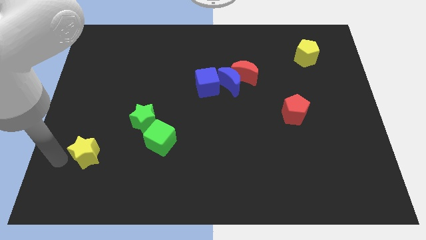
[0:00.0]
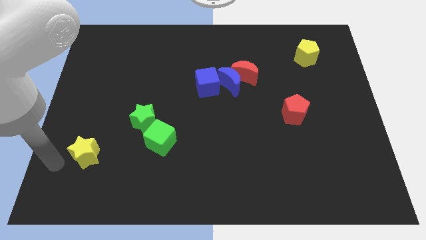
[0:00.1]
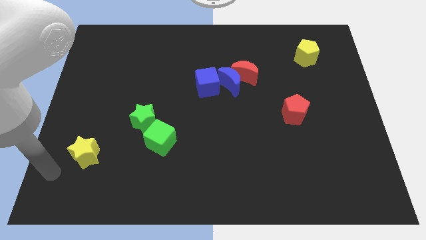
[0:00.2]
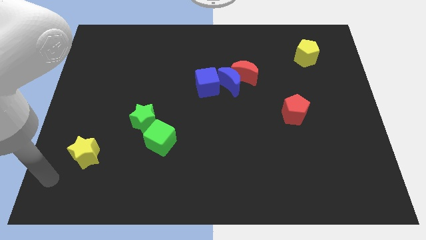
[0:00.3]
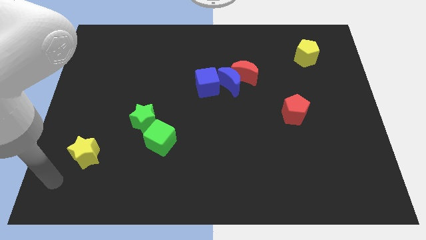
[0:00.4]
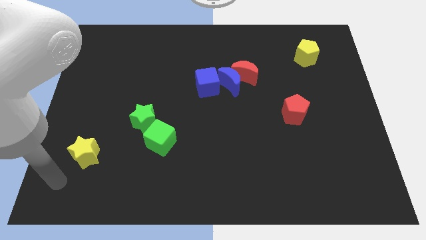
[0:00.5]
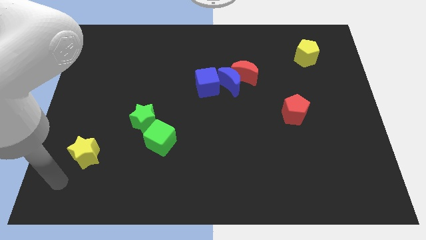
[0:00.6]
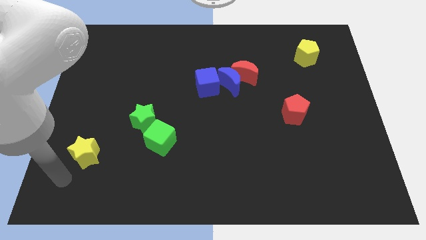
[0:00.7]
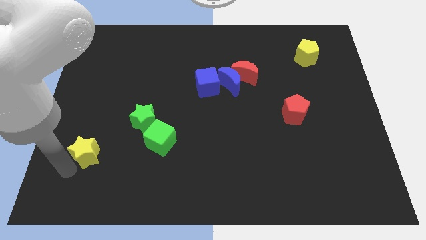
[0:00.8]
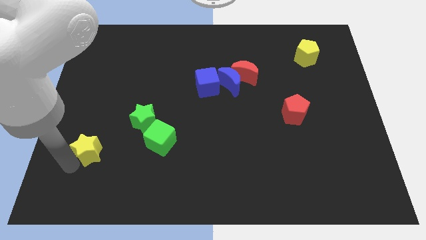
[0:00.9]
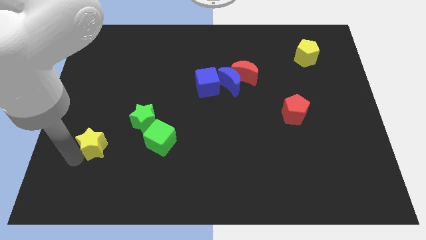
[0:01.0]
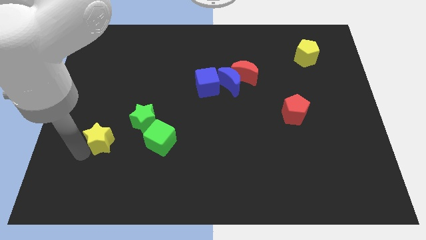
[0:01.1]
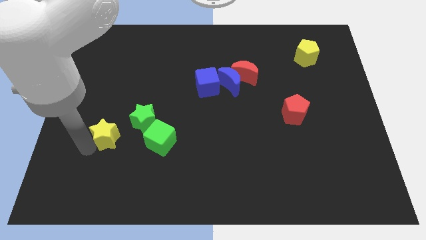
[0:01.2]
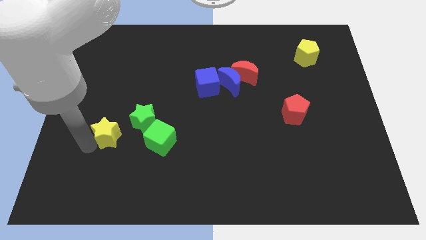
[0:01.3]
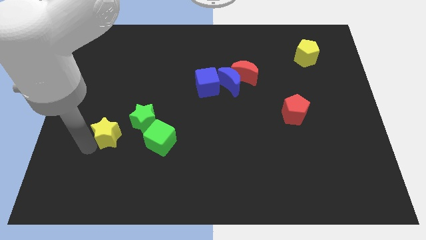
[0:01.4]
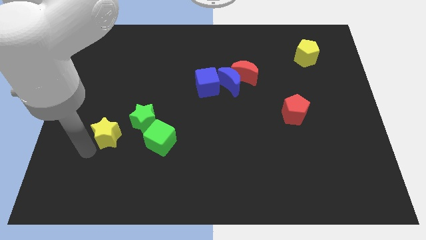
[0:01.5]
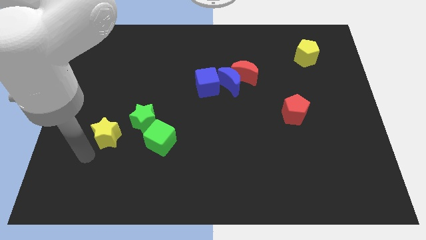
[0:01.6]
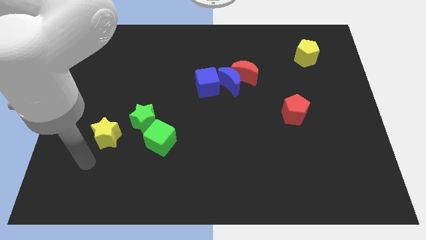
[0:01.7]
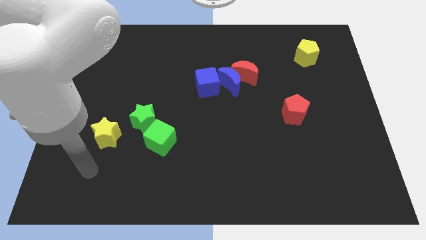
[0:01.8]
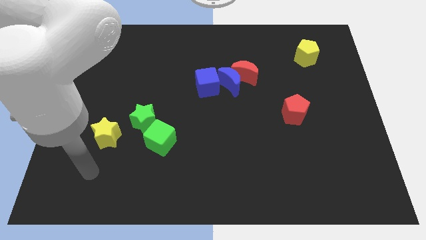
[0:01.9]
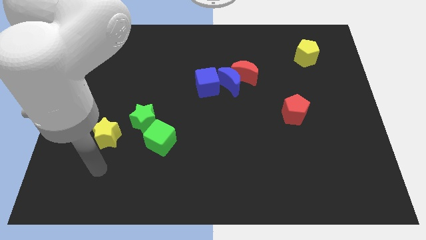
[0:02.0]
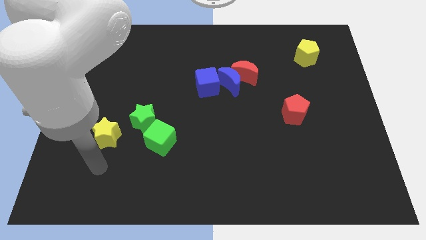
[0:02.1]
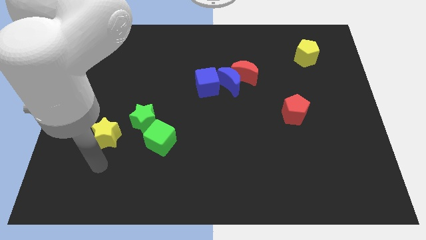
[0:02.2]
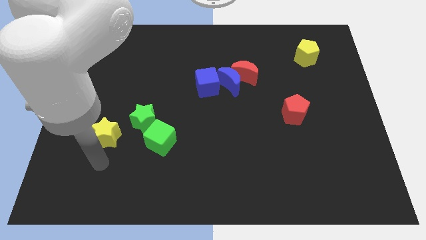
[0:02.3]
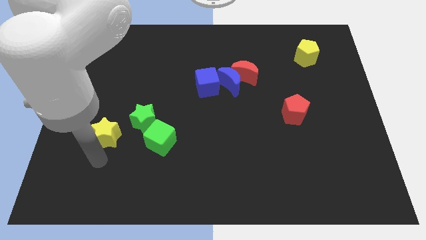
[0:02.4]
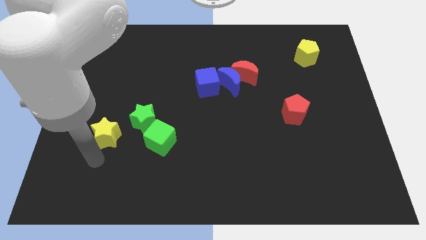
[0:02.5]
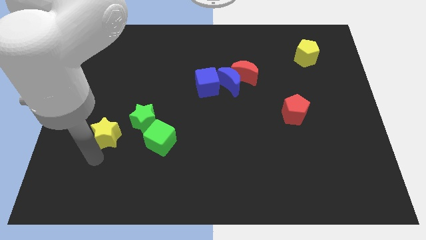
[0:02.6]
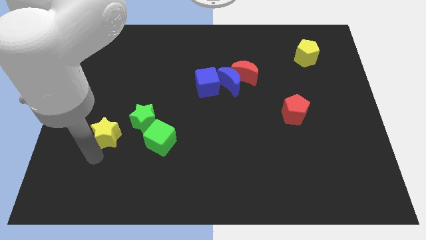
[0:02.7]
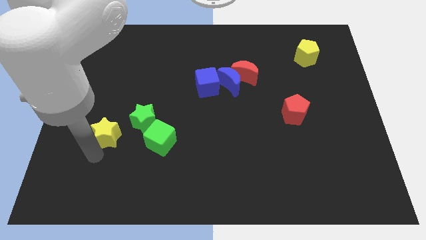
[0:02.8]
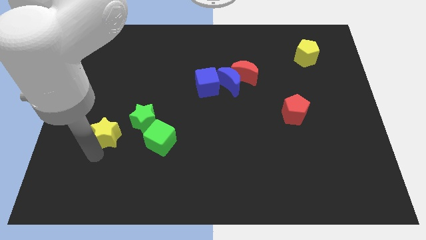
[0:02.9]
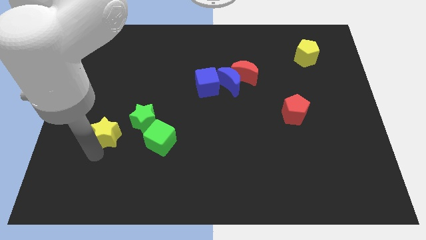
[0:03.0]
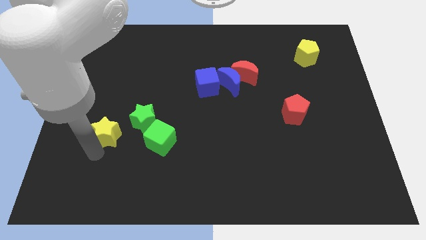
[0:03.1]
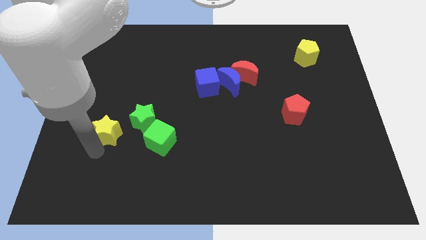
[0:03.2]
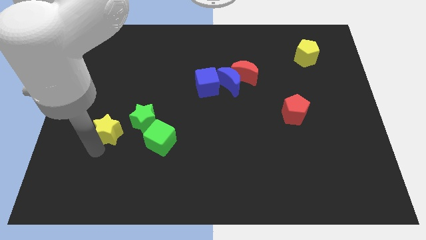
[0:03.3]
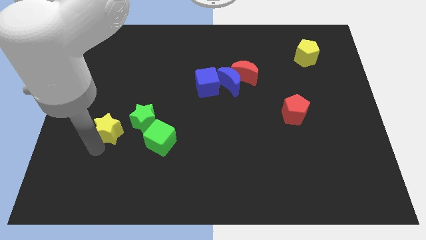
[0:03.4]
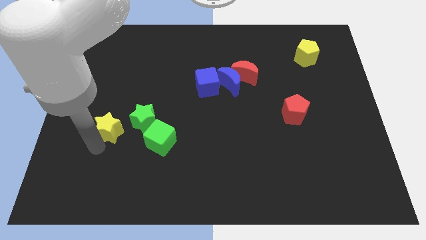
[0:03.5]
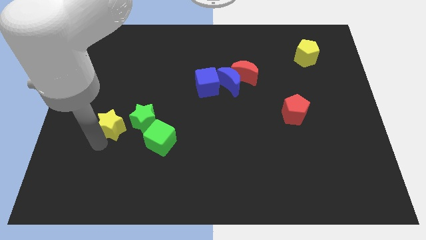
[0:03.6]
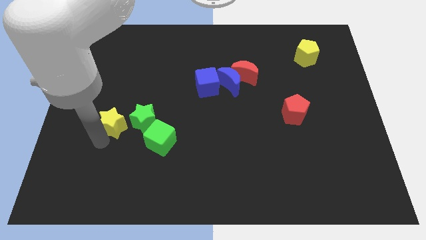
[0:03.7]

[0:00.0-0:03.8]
push the yellow star to the left of the green star

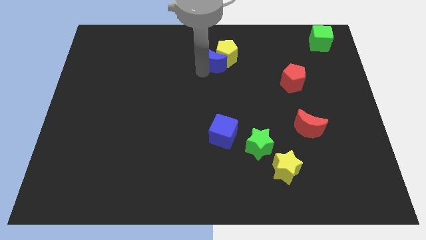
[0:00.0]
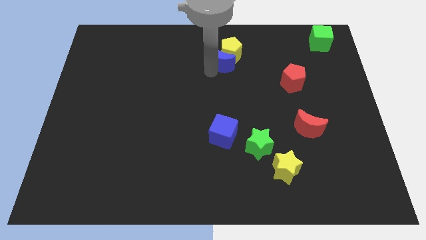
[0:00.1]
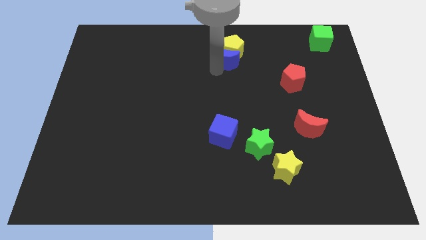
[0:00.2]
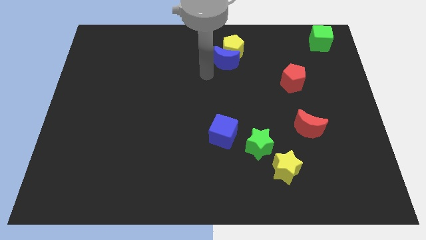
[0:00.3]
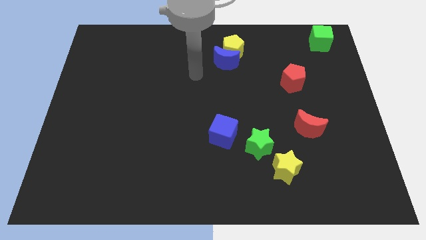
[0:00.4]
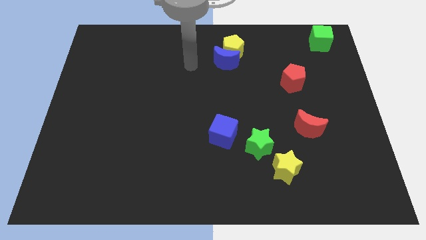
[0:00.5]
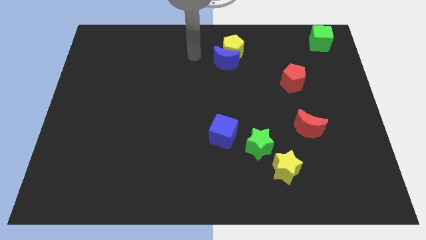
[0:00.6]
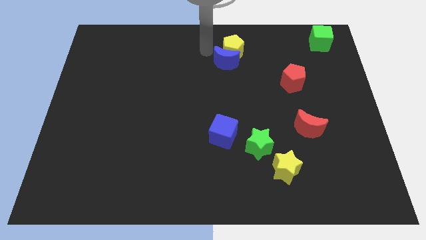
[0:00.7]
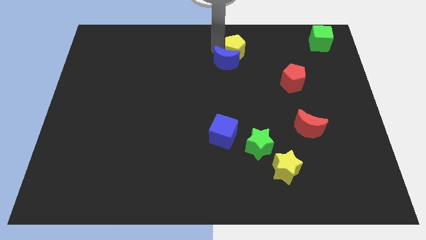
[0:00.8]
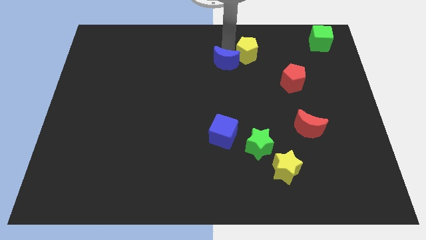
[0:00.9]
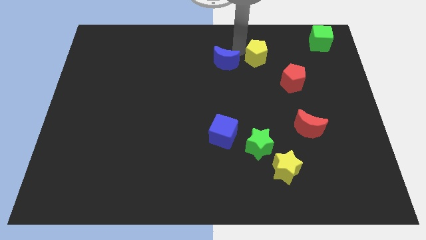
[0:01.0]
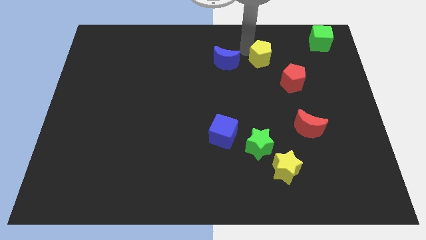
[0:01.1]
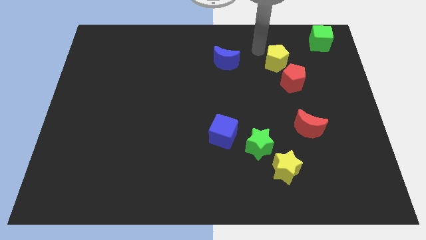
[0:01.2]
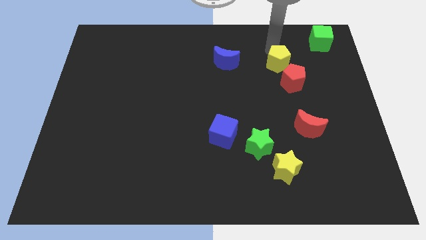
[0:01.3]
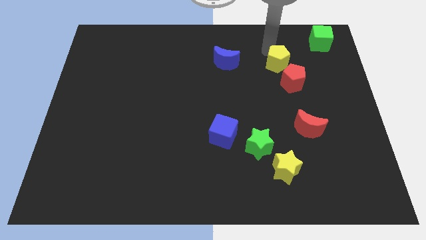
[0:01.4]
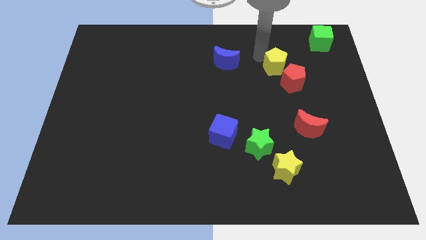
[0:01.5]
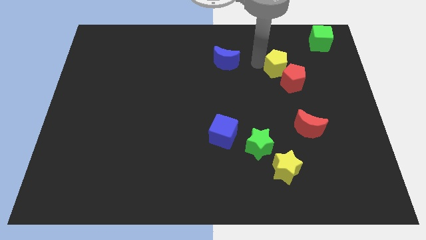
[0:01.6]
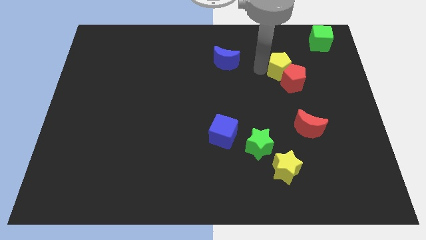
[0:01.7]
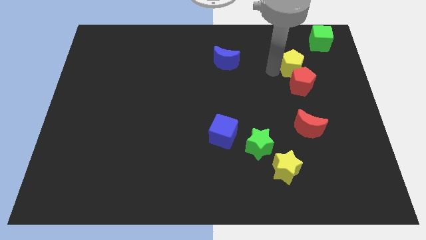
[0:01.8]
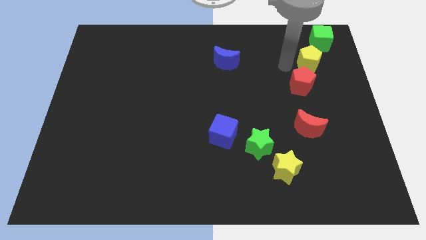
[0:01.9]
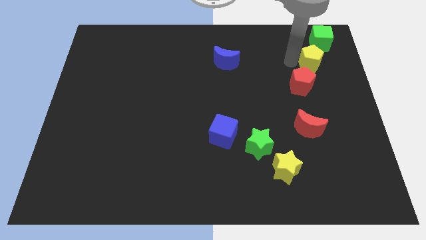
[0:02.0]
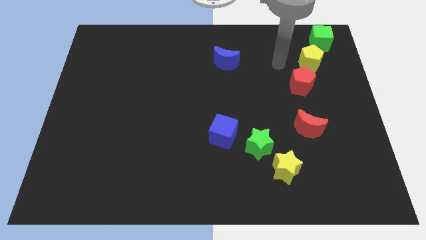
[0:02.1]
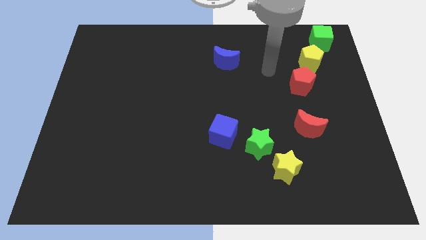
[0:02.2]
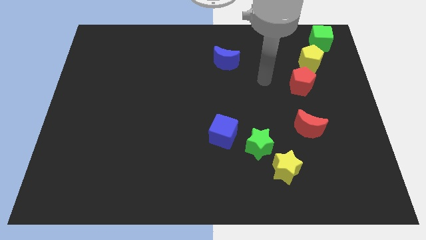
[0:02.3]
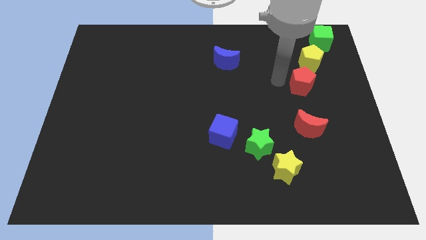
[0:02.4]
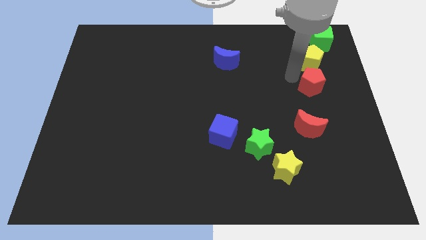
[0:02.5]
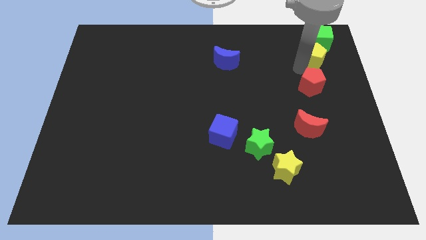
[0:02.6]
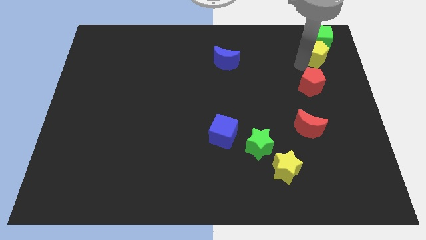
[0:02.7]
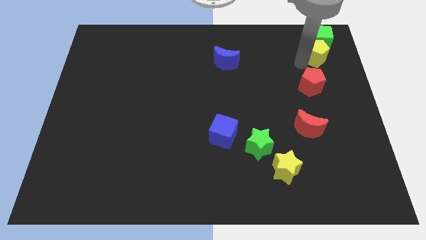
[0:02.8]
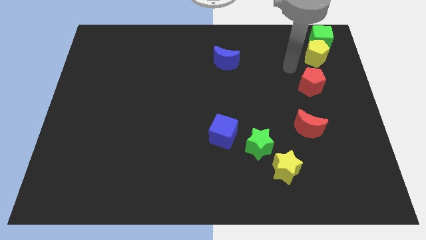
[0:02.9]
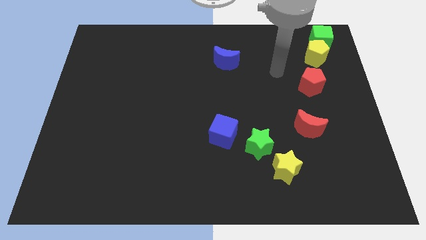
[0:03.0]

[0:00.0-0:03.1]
separate yellow pentagon from blue moon

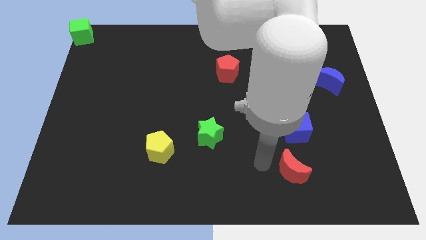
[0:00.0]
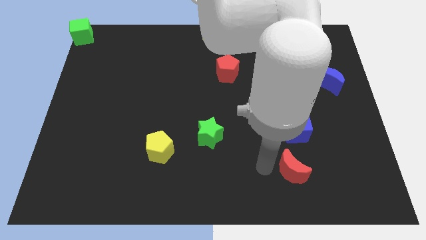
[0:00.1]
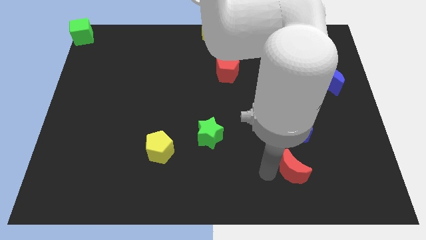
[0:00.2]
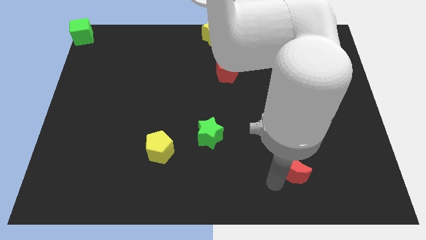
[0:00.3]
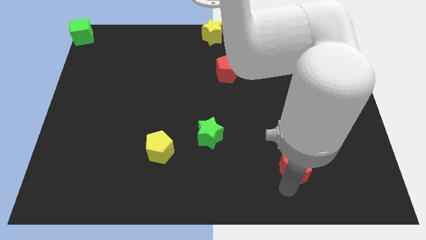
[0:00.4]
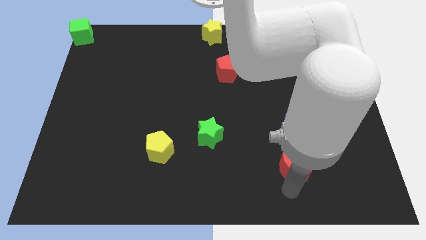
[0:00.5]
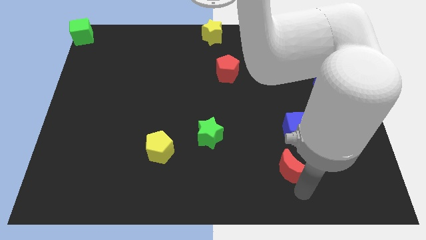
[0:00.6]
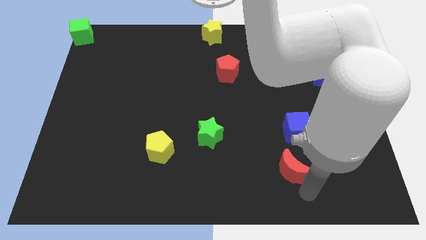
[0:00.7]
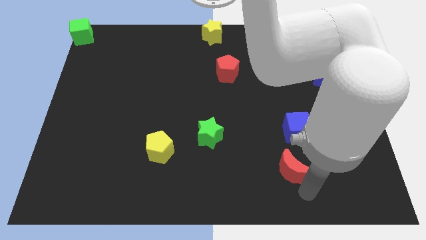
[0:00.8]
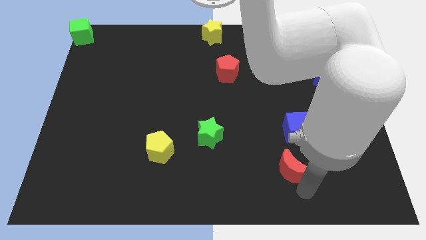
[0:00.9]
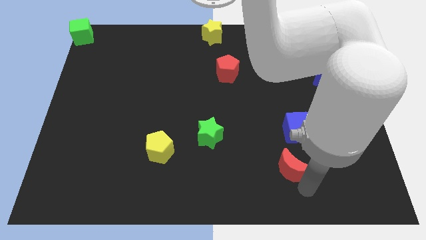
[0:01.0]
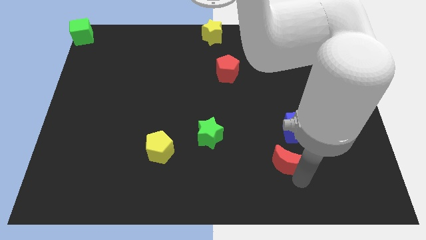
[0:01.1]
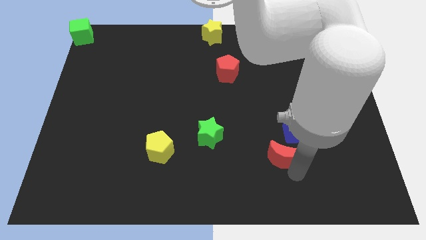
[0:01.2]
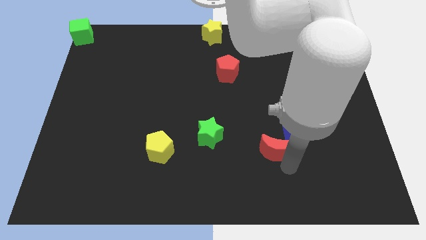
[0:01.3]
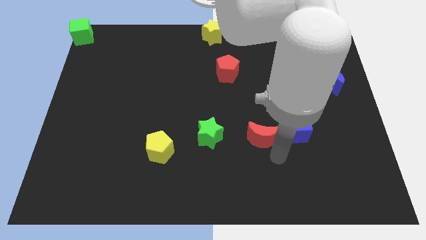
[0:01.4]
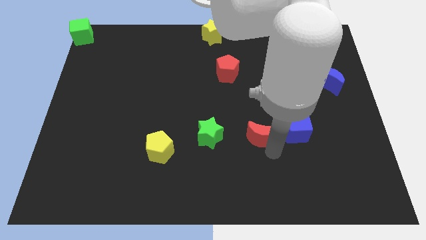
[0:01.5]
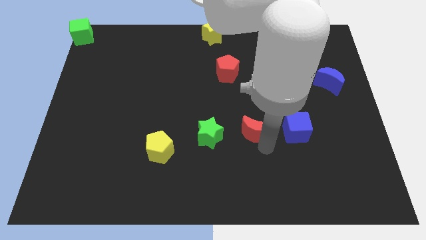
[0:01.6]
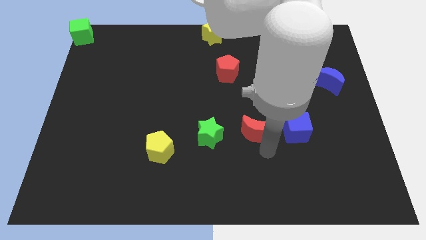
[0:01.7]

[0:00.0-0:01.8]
move red crescent to the right of green star

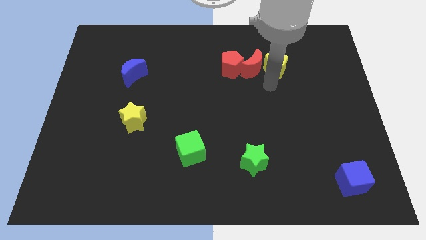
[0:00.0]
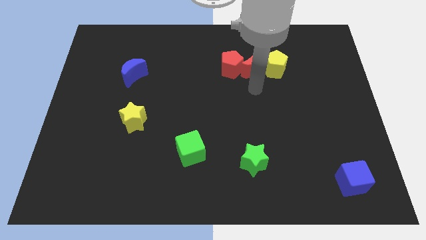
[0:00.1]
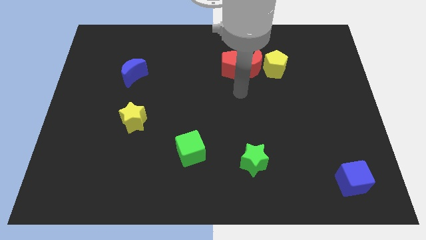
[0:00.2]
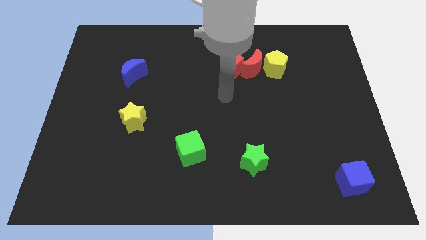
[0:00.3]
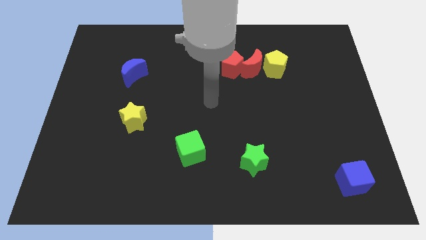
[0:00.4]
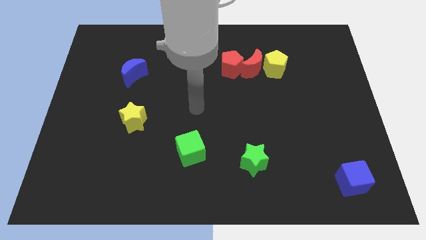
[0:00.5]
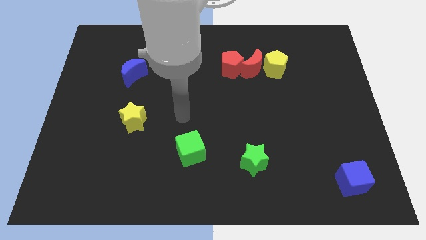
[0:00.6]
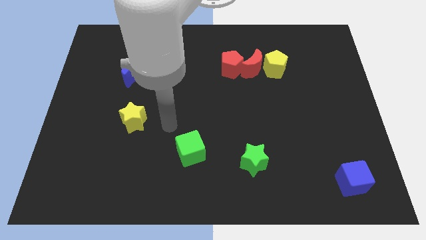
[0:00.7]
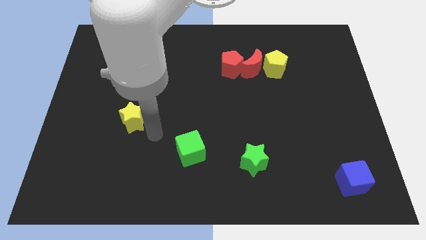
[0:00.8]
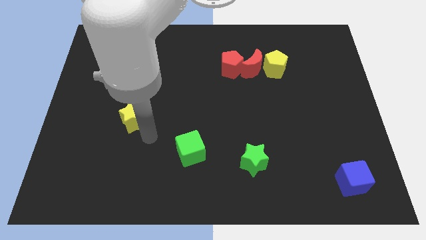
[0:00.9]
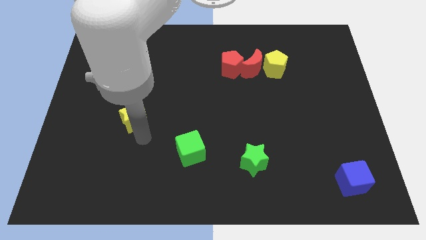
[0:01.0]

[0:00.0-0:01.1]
point your arm below yellow pentagon
